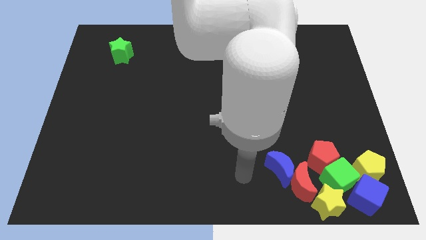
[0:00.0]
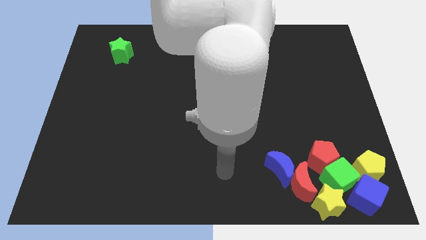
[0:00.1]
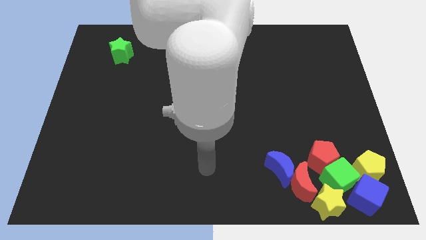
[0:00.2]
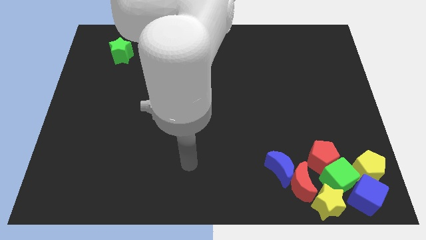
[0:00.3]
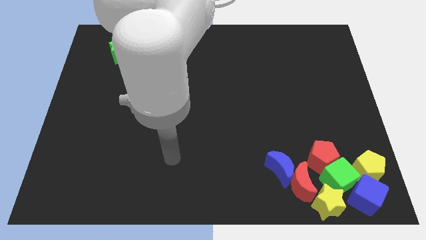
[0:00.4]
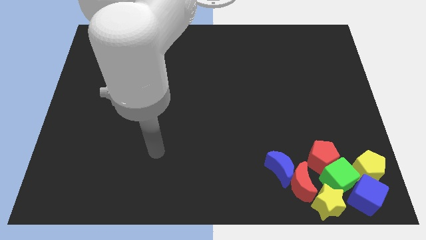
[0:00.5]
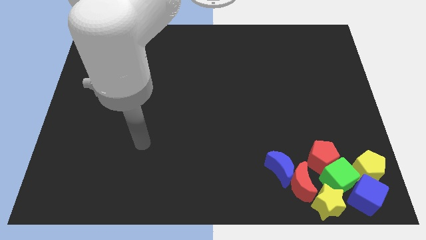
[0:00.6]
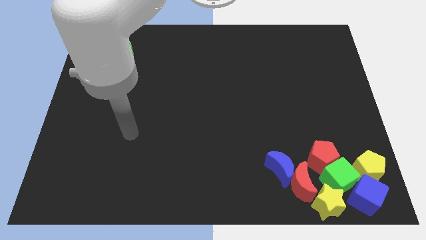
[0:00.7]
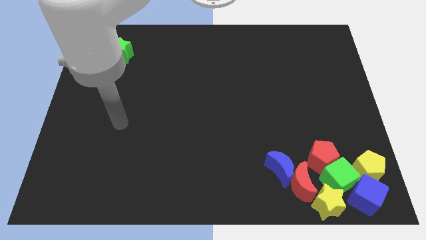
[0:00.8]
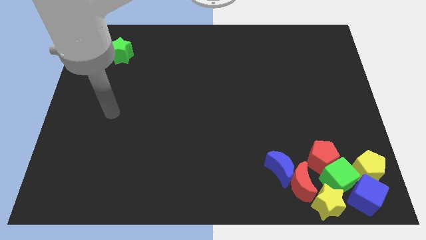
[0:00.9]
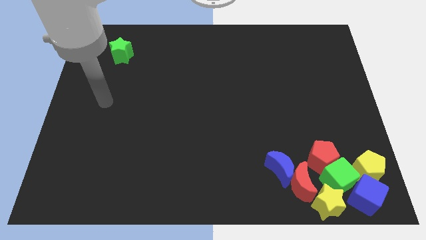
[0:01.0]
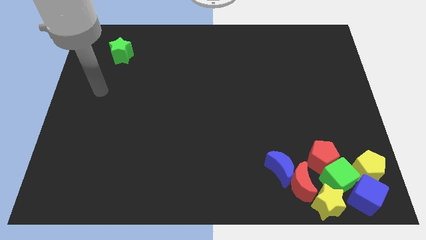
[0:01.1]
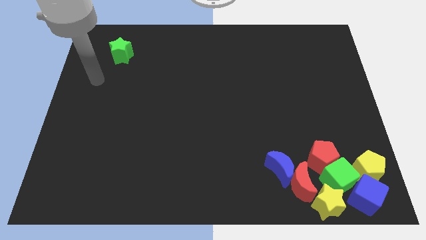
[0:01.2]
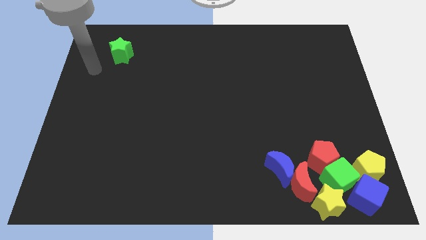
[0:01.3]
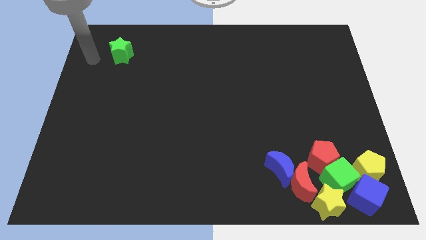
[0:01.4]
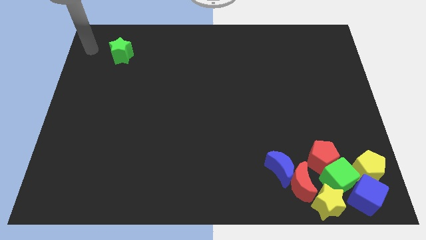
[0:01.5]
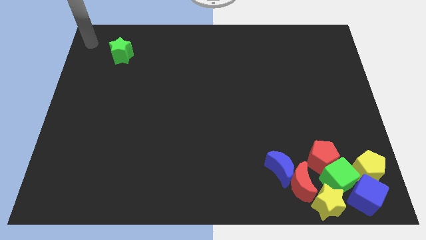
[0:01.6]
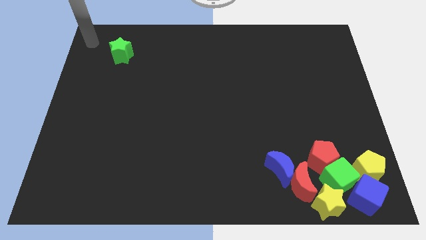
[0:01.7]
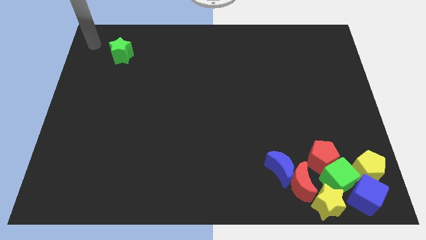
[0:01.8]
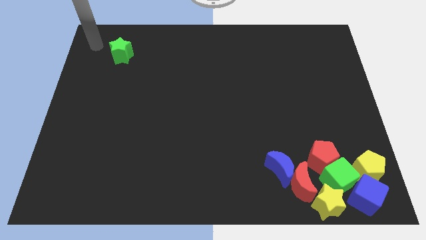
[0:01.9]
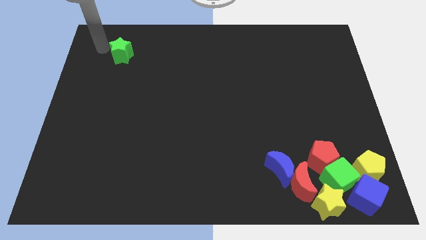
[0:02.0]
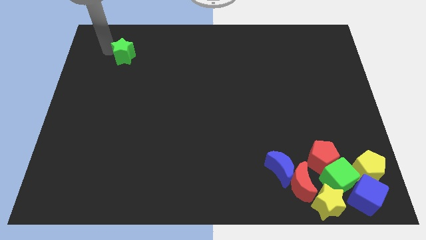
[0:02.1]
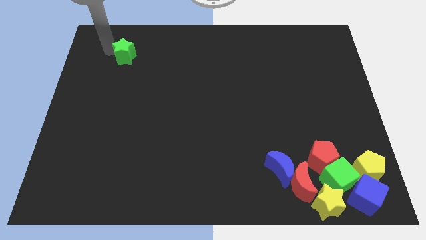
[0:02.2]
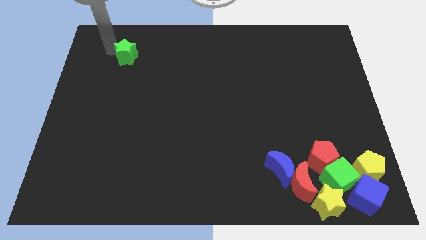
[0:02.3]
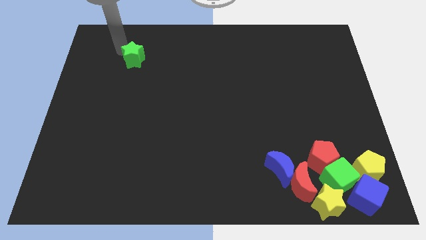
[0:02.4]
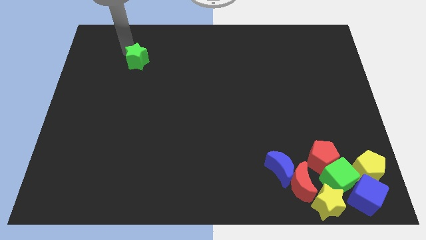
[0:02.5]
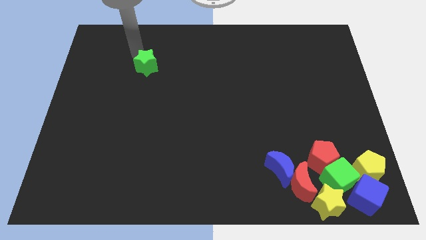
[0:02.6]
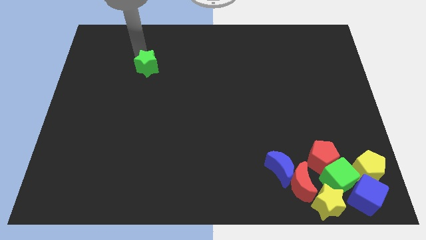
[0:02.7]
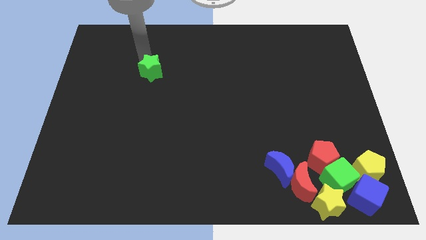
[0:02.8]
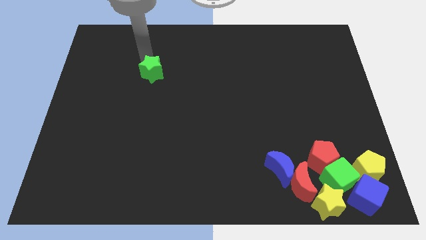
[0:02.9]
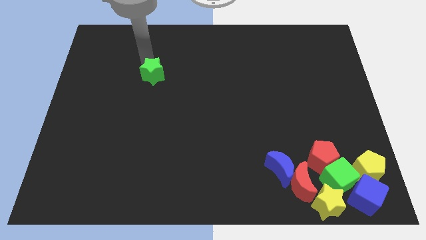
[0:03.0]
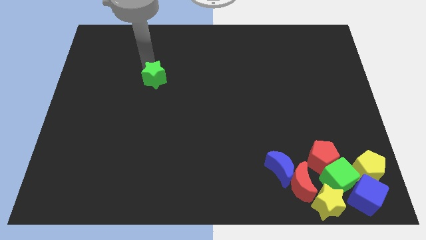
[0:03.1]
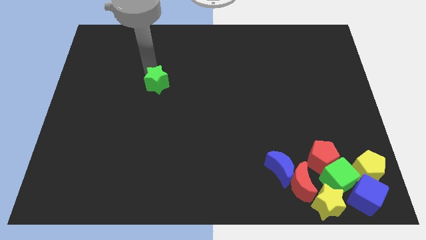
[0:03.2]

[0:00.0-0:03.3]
push the green star towards the bottom

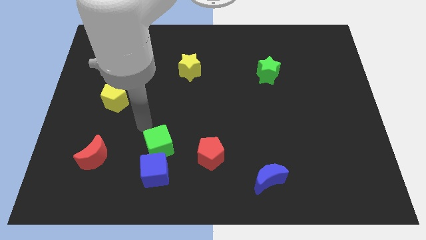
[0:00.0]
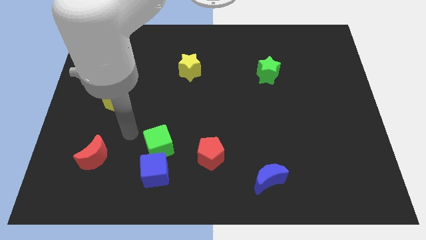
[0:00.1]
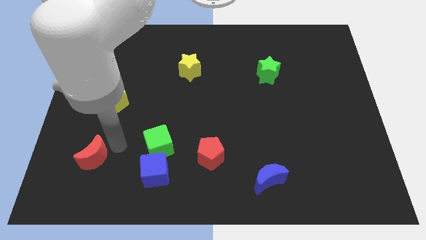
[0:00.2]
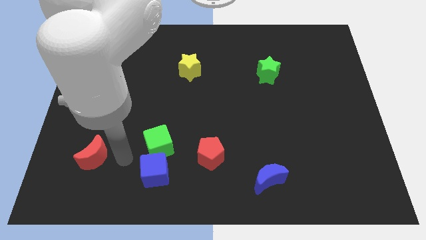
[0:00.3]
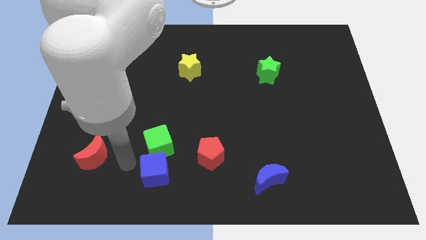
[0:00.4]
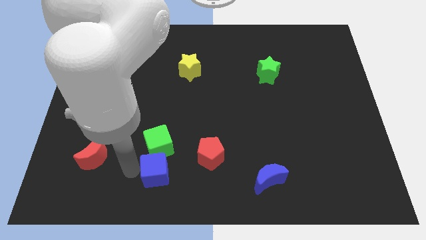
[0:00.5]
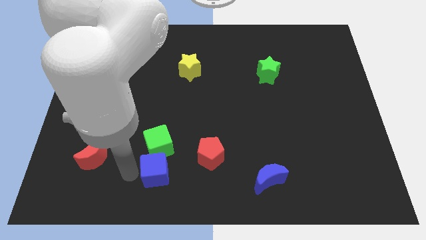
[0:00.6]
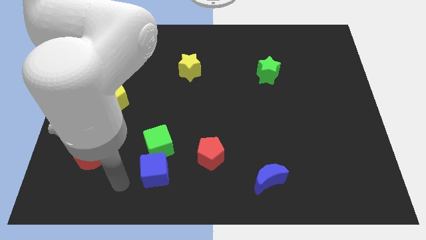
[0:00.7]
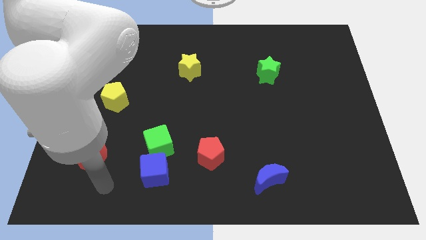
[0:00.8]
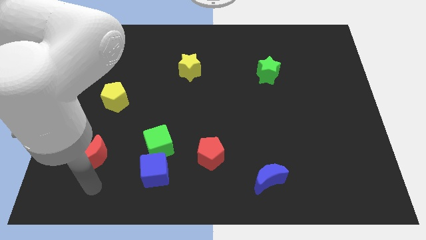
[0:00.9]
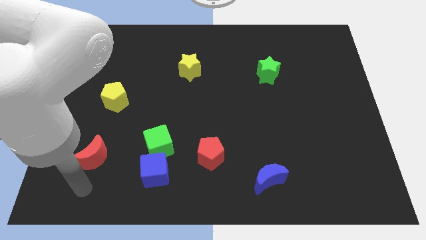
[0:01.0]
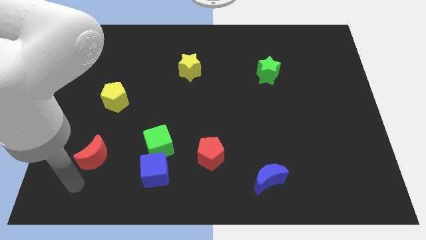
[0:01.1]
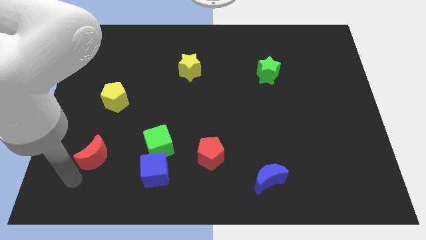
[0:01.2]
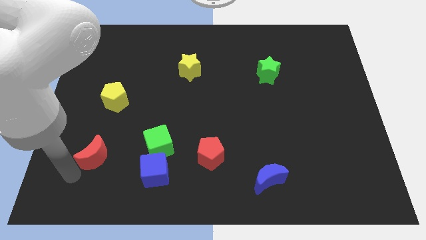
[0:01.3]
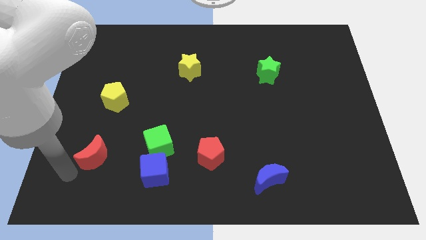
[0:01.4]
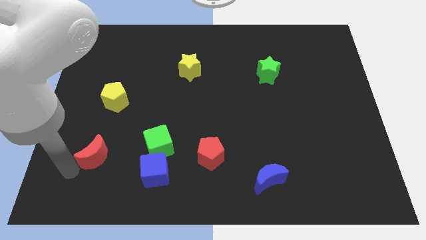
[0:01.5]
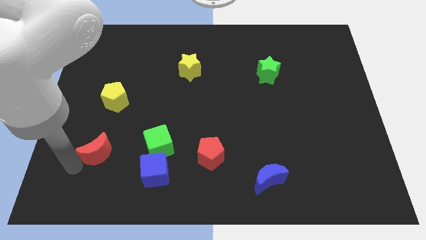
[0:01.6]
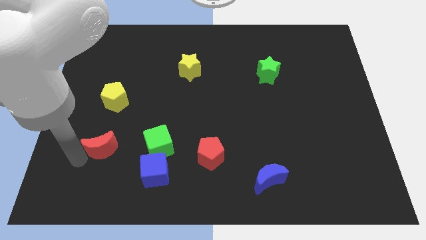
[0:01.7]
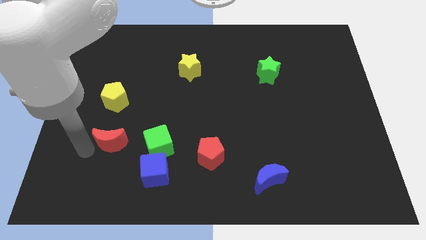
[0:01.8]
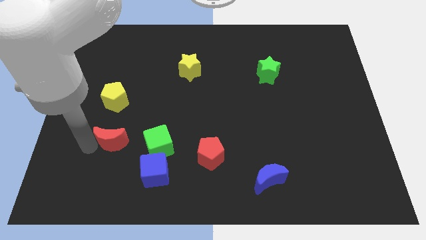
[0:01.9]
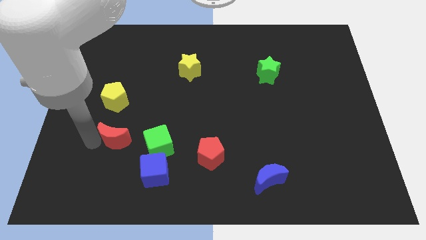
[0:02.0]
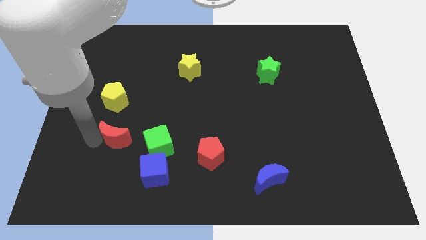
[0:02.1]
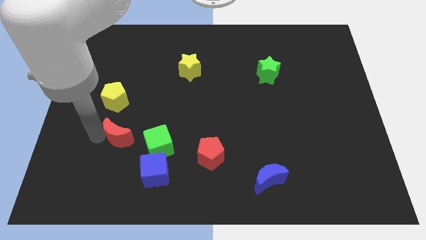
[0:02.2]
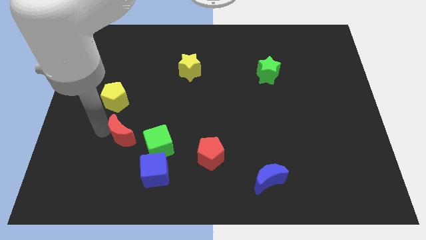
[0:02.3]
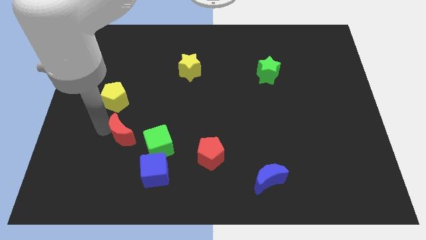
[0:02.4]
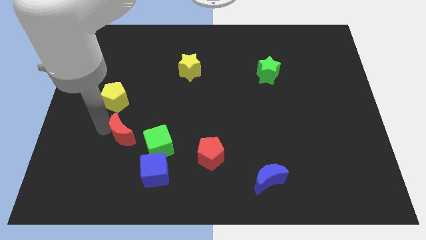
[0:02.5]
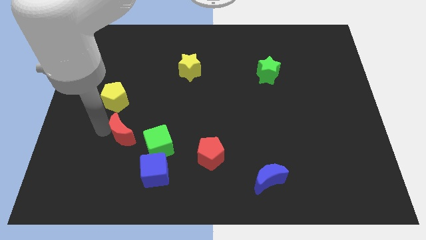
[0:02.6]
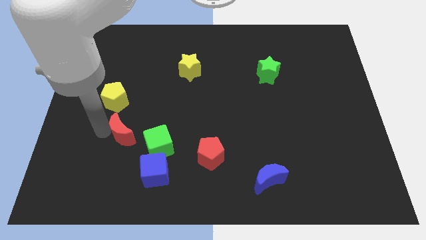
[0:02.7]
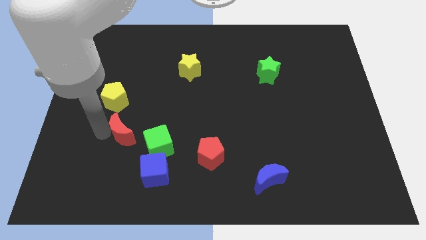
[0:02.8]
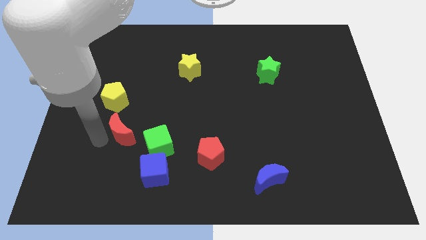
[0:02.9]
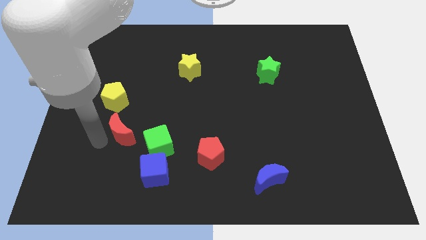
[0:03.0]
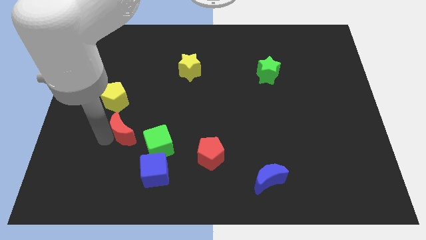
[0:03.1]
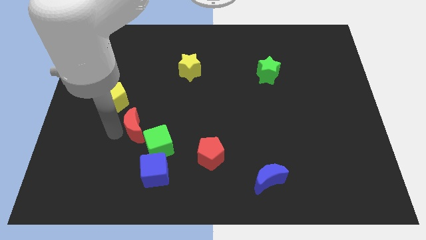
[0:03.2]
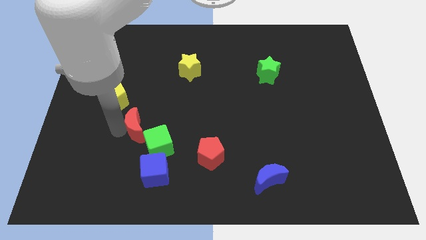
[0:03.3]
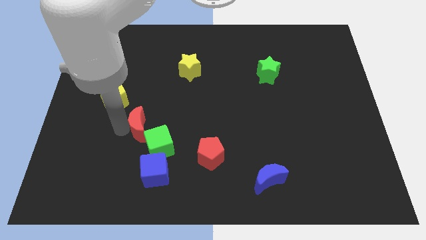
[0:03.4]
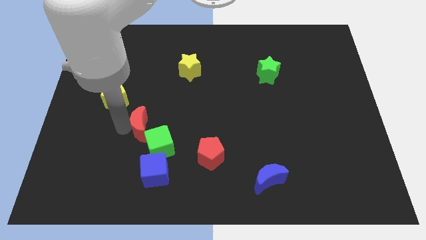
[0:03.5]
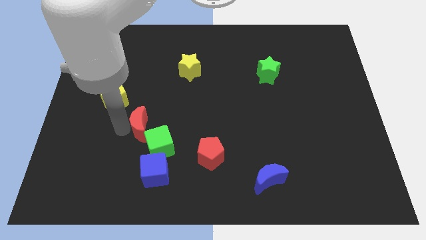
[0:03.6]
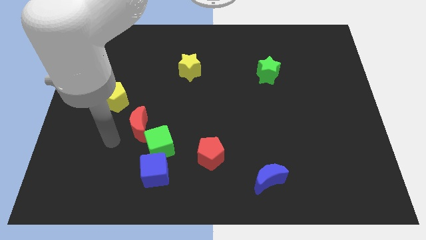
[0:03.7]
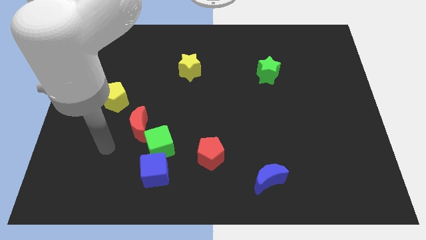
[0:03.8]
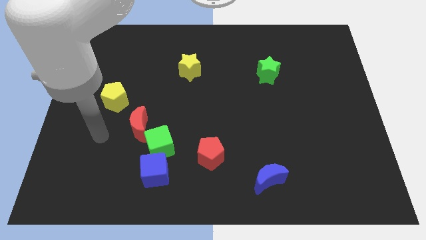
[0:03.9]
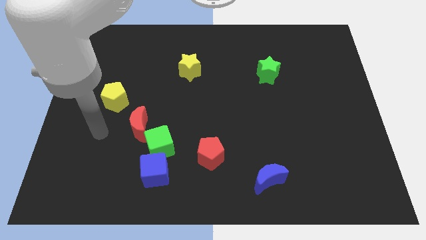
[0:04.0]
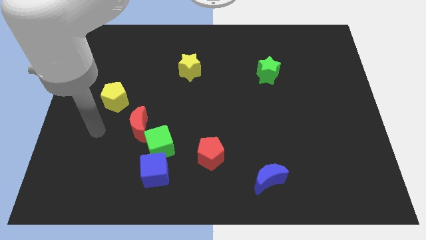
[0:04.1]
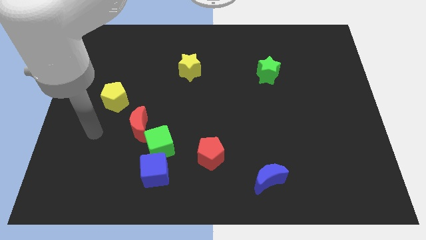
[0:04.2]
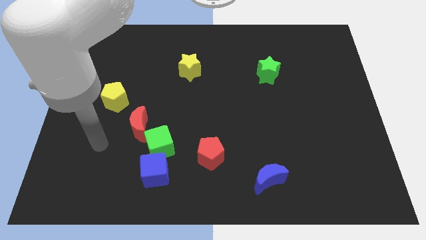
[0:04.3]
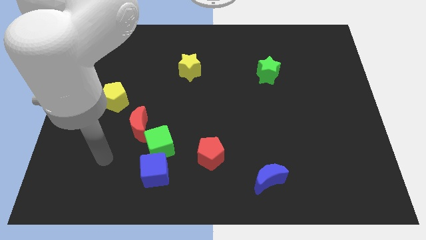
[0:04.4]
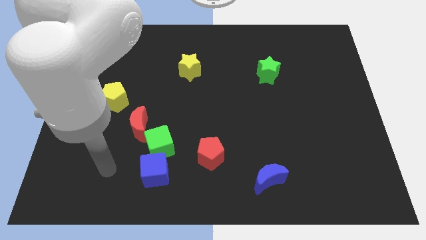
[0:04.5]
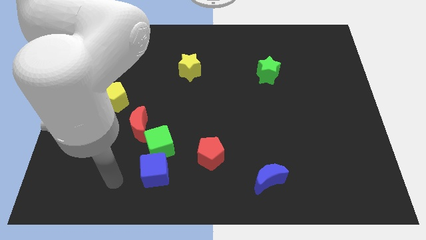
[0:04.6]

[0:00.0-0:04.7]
place the red crescent above the green cube

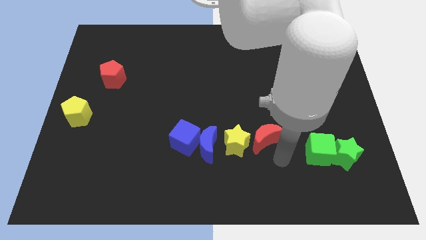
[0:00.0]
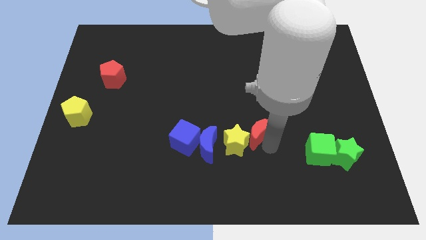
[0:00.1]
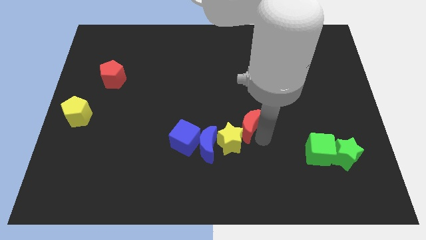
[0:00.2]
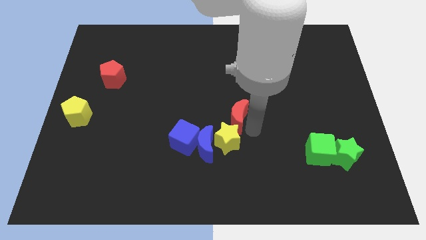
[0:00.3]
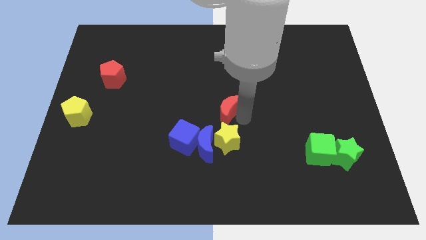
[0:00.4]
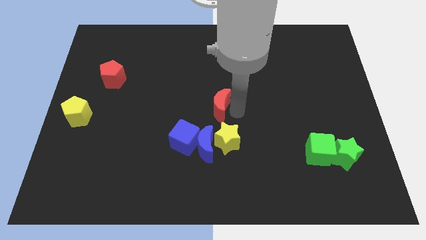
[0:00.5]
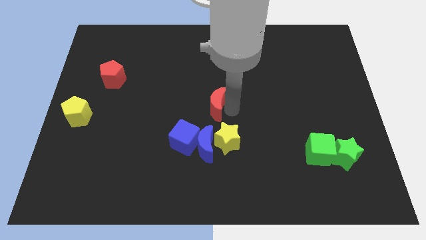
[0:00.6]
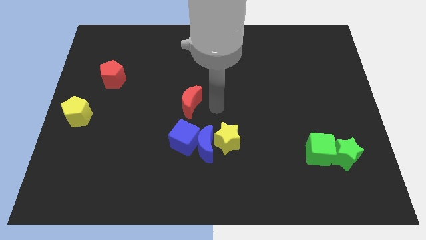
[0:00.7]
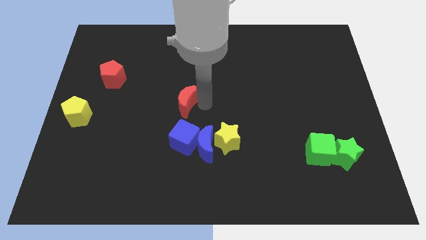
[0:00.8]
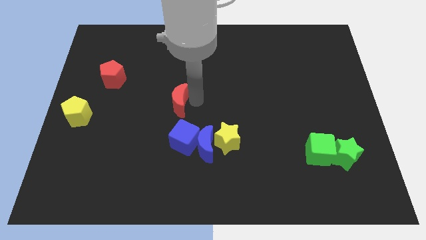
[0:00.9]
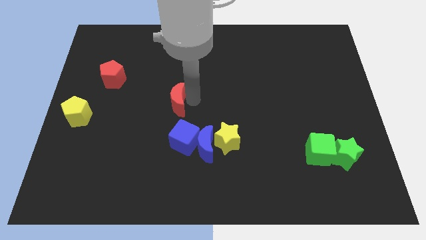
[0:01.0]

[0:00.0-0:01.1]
move the red crescent to the top of the blue cube
